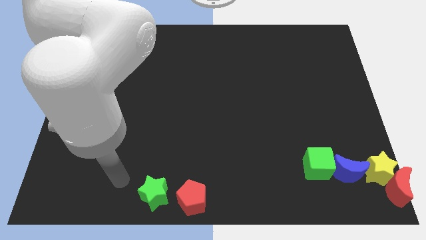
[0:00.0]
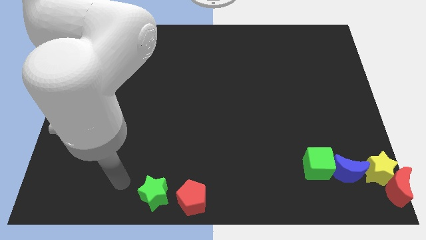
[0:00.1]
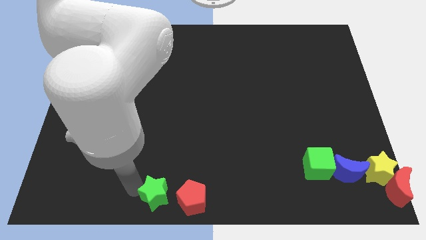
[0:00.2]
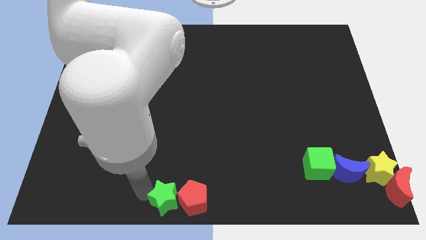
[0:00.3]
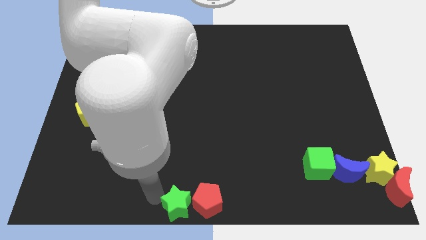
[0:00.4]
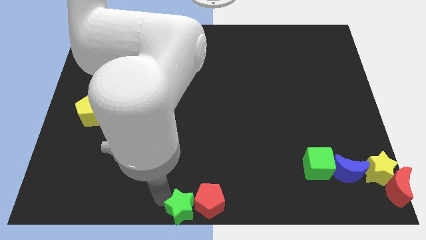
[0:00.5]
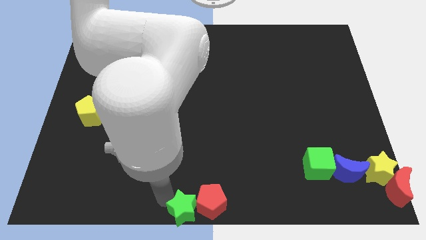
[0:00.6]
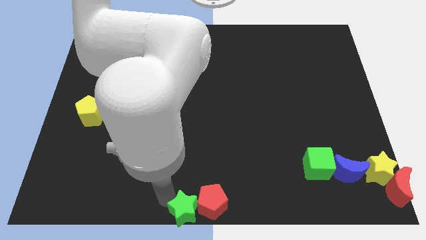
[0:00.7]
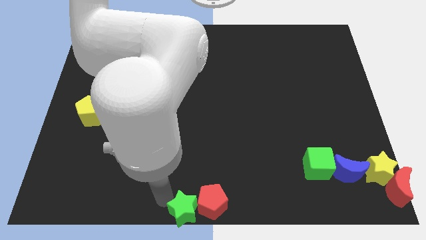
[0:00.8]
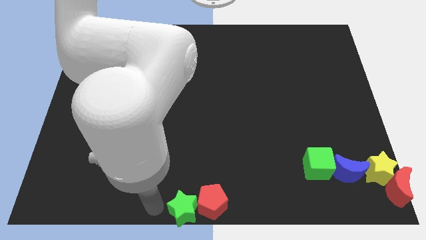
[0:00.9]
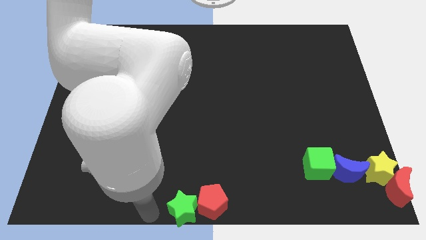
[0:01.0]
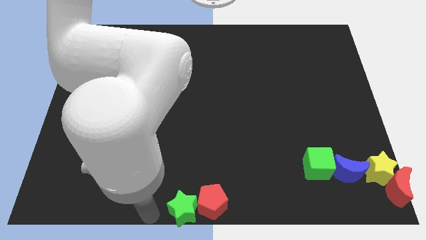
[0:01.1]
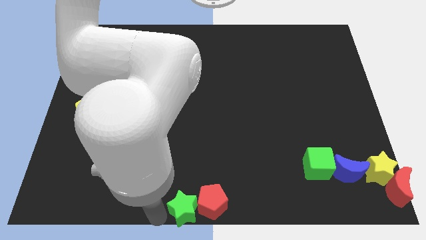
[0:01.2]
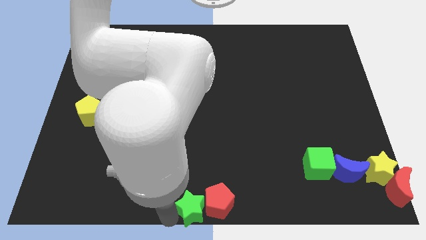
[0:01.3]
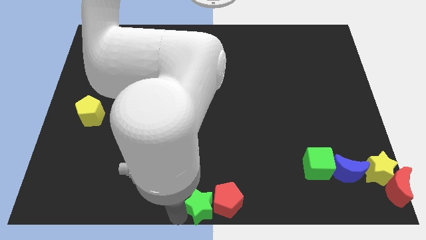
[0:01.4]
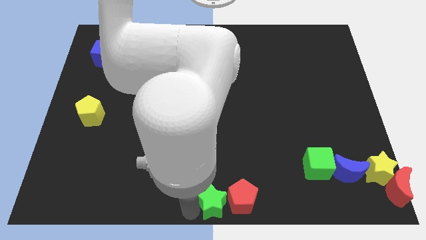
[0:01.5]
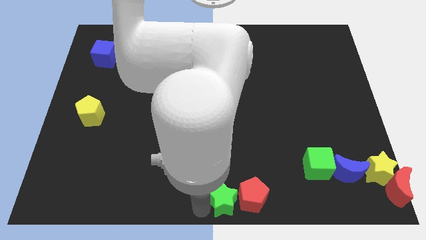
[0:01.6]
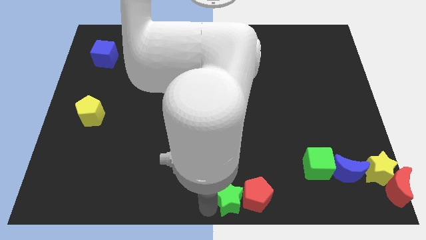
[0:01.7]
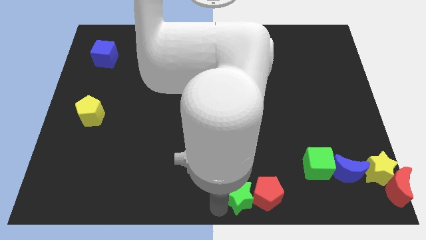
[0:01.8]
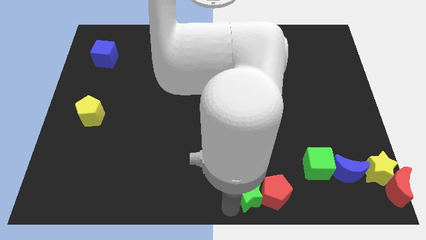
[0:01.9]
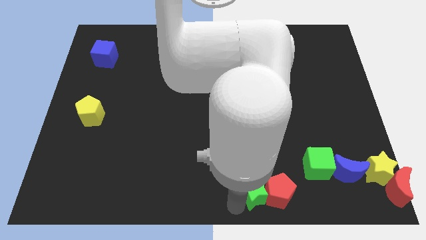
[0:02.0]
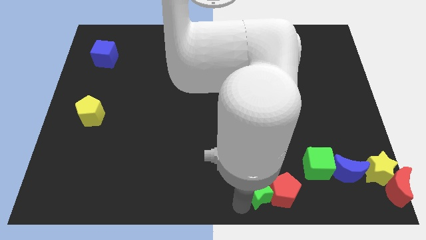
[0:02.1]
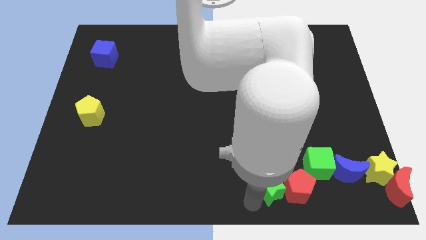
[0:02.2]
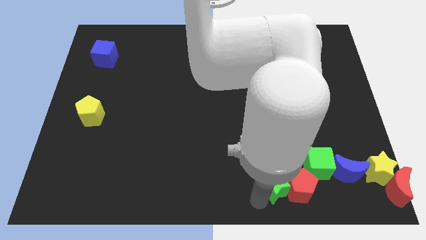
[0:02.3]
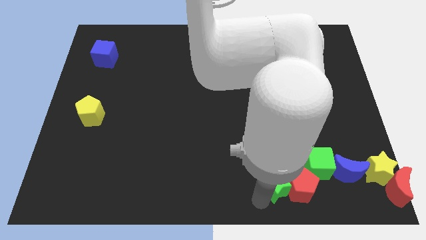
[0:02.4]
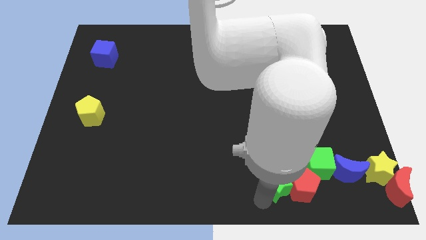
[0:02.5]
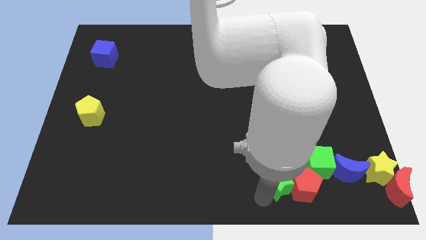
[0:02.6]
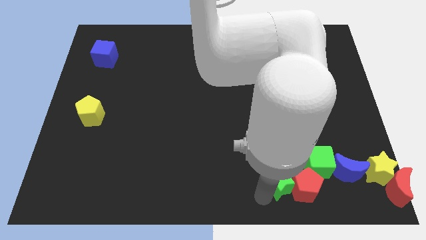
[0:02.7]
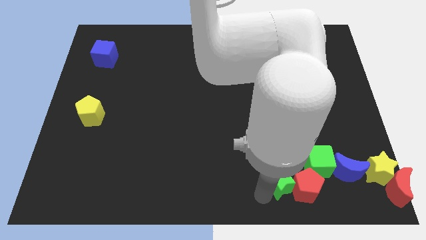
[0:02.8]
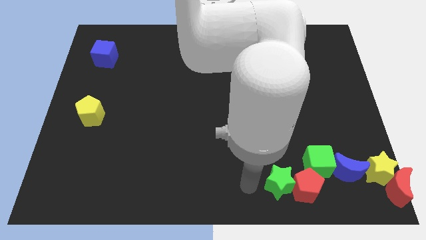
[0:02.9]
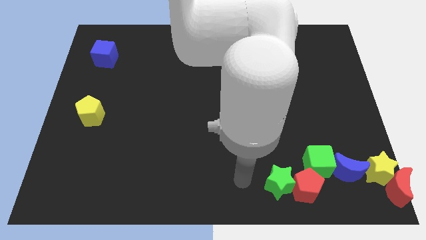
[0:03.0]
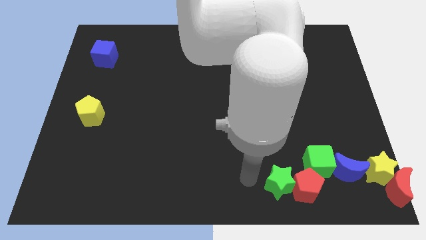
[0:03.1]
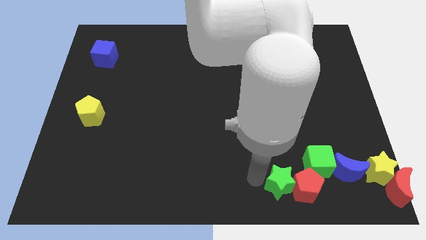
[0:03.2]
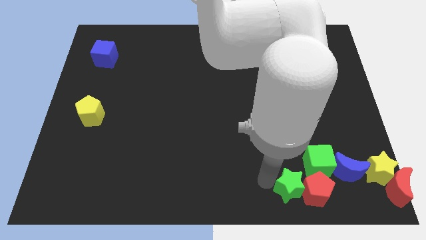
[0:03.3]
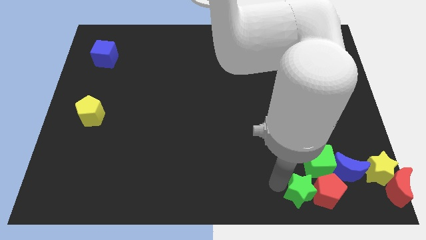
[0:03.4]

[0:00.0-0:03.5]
place green star to the bottom left of green cube

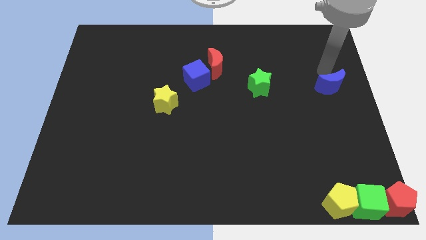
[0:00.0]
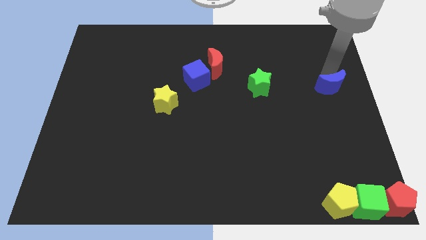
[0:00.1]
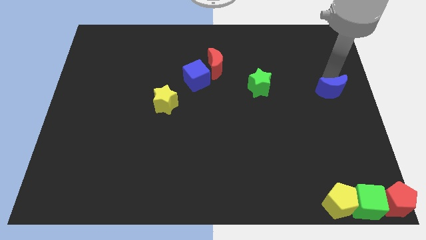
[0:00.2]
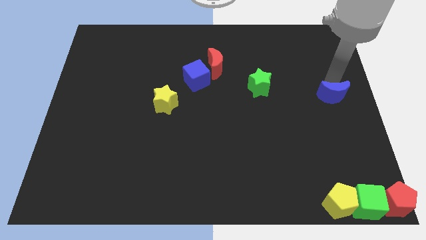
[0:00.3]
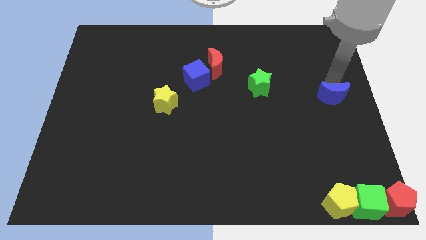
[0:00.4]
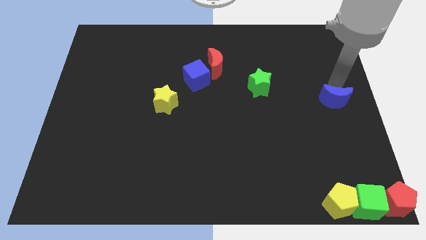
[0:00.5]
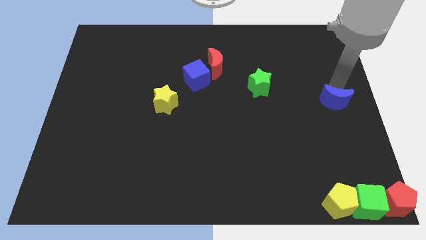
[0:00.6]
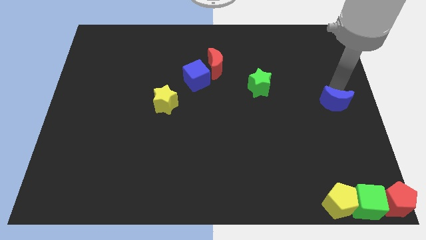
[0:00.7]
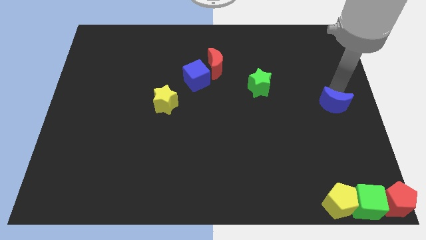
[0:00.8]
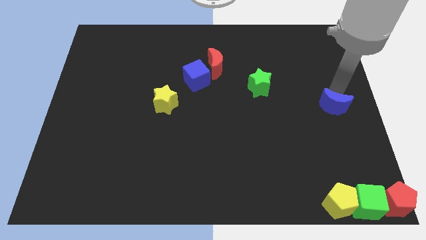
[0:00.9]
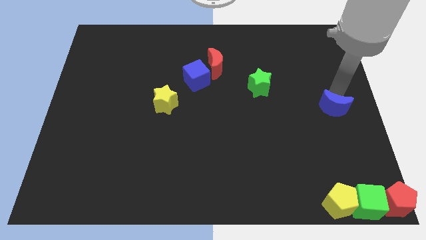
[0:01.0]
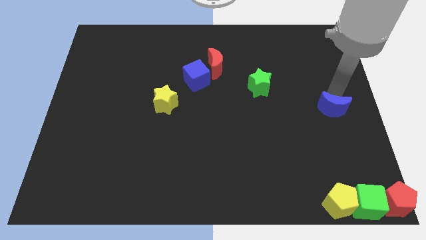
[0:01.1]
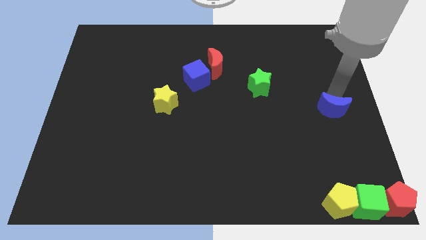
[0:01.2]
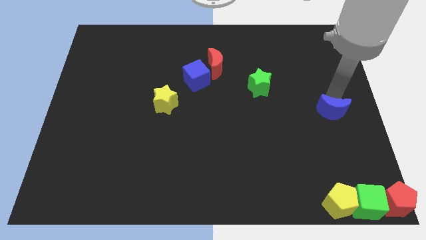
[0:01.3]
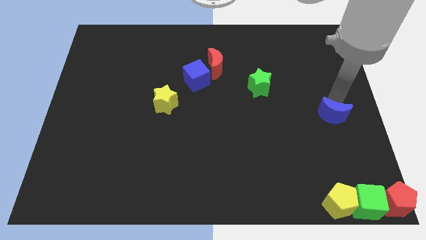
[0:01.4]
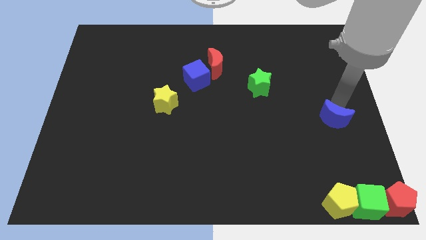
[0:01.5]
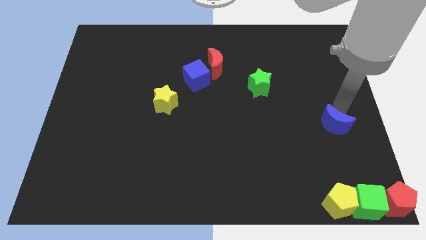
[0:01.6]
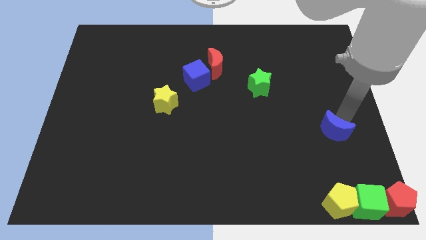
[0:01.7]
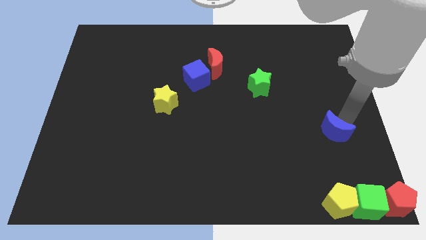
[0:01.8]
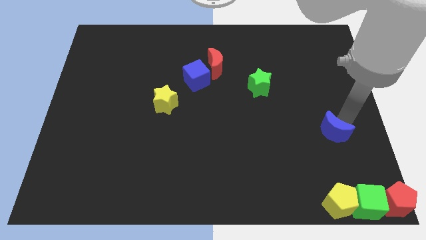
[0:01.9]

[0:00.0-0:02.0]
push the blue crescent to the bottom right of the green star

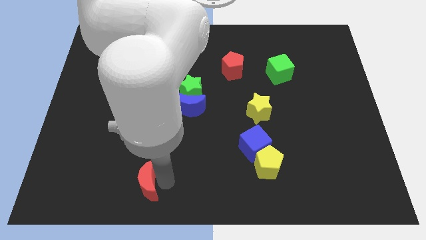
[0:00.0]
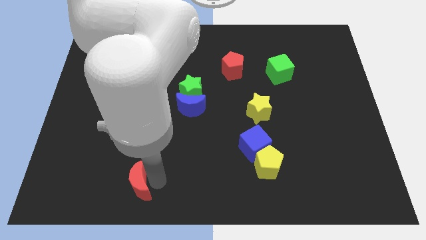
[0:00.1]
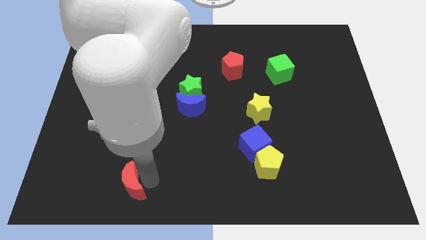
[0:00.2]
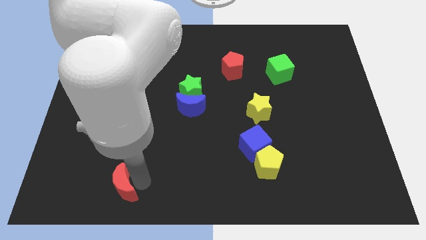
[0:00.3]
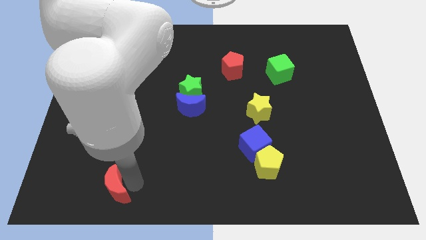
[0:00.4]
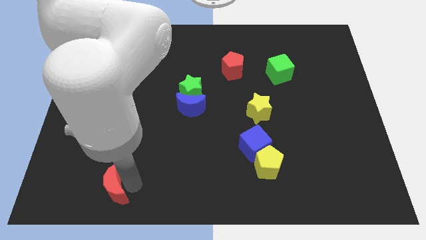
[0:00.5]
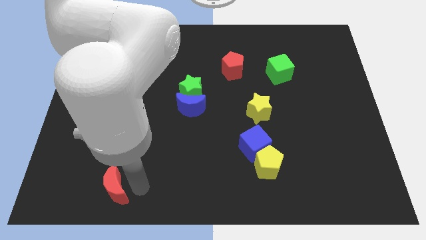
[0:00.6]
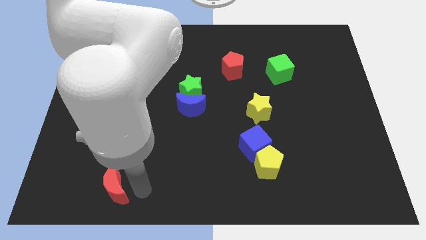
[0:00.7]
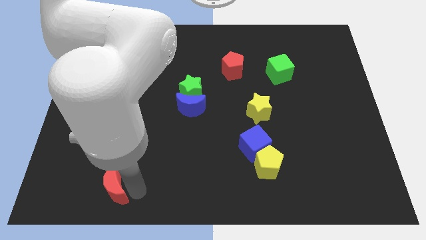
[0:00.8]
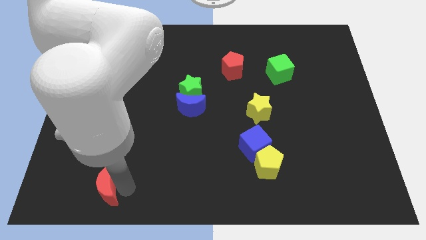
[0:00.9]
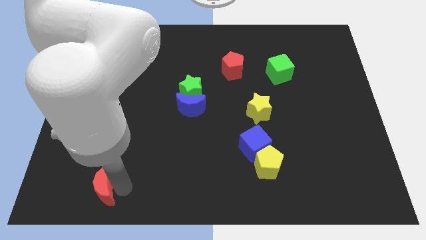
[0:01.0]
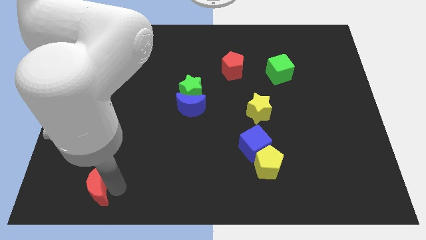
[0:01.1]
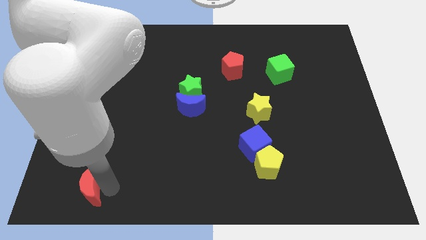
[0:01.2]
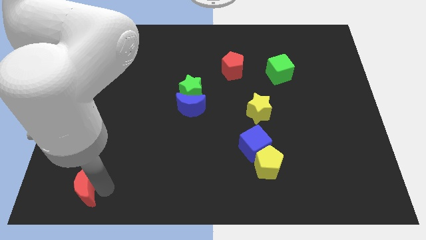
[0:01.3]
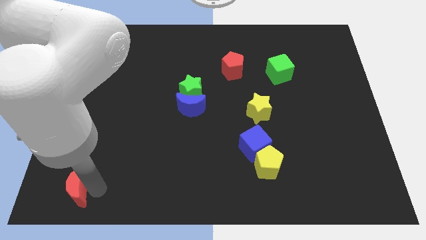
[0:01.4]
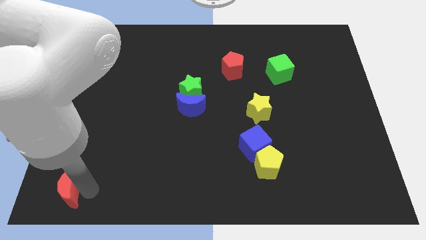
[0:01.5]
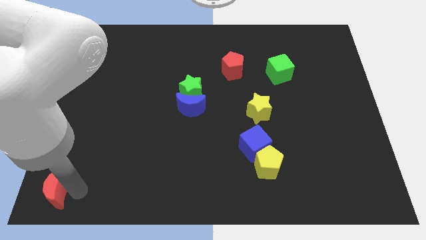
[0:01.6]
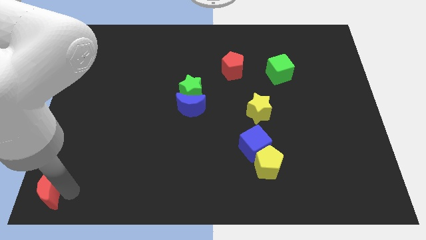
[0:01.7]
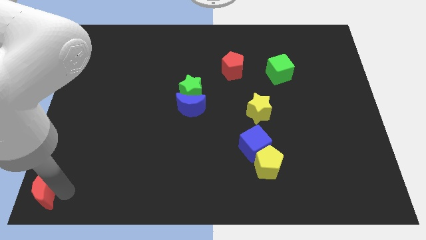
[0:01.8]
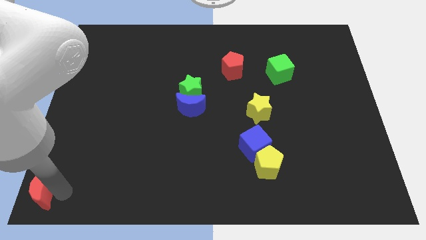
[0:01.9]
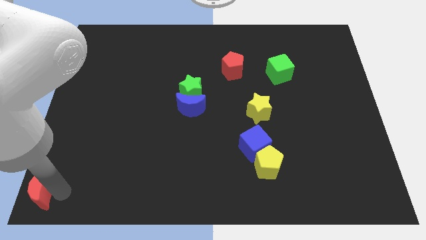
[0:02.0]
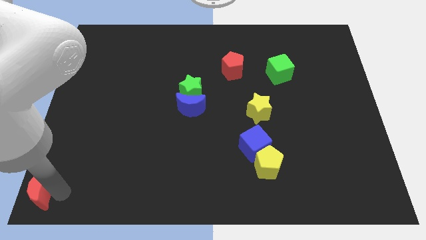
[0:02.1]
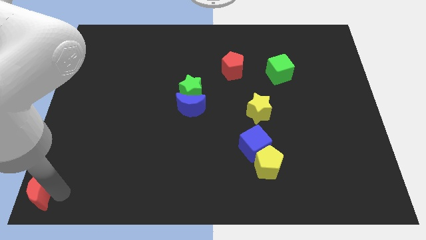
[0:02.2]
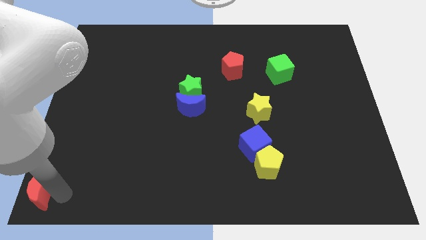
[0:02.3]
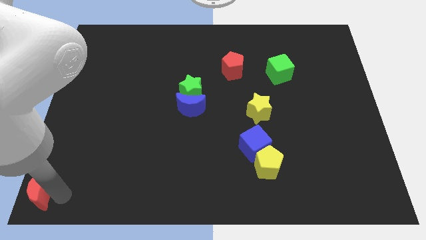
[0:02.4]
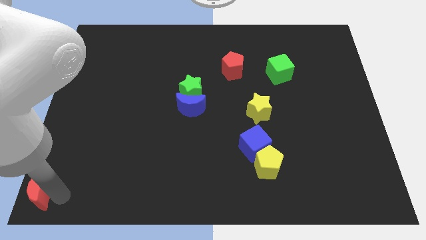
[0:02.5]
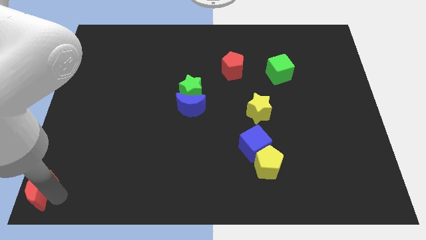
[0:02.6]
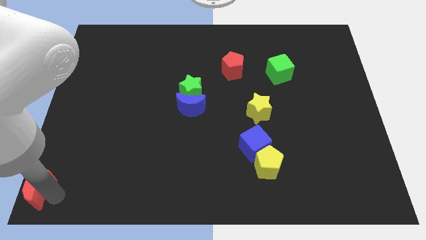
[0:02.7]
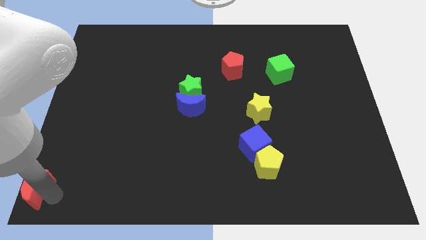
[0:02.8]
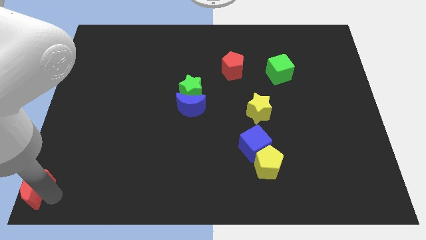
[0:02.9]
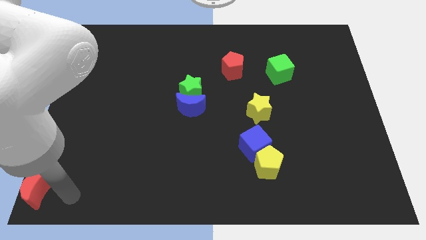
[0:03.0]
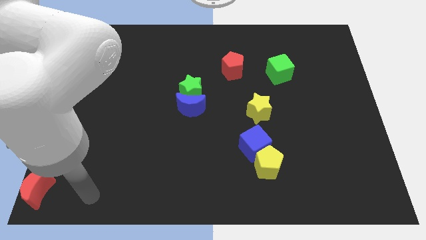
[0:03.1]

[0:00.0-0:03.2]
place the red moon to the bottom left of the board

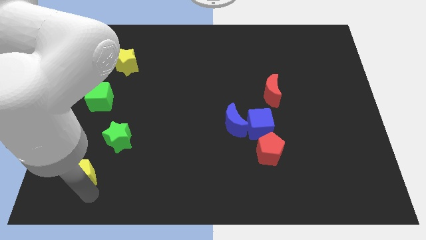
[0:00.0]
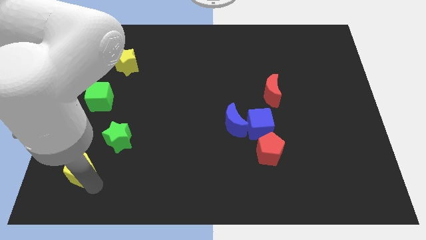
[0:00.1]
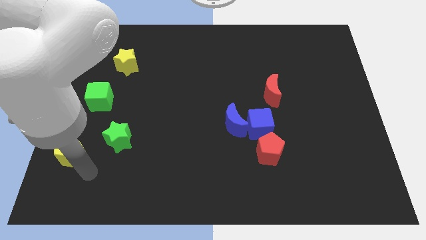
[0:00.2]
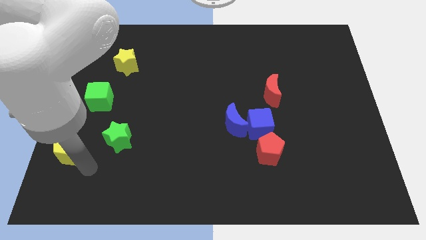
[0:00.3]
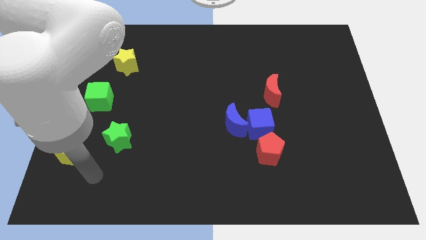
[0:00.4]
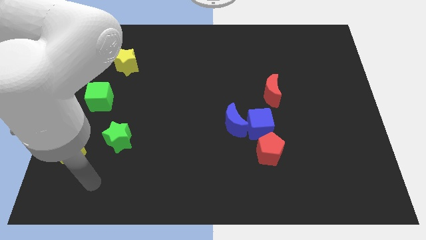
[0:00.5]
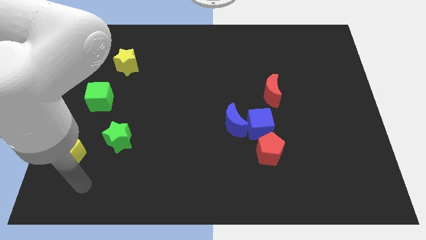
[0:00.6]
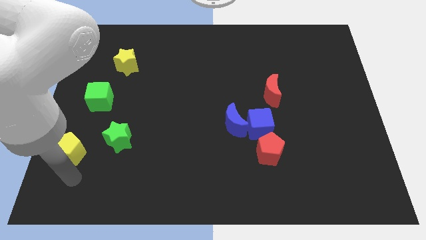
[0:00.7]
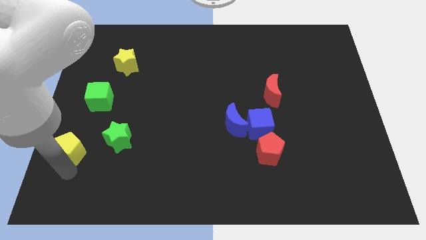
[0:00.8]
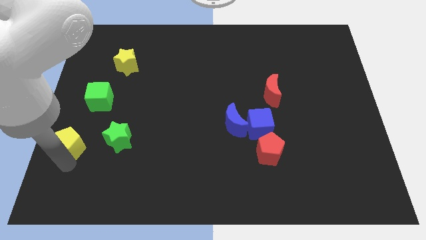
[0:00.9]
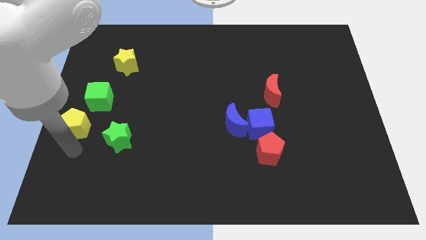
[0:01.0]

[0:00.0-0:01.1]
place the yellow pentagon to the left of the green star
